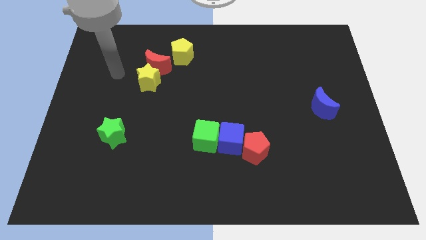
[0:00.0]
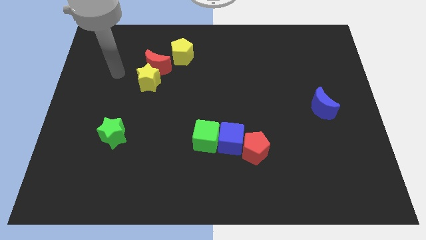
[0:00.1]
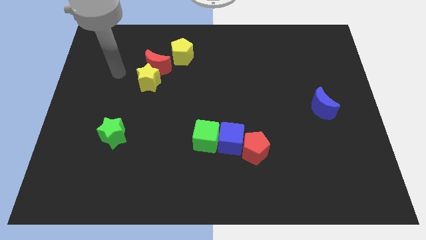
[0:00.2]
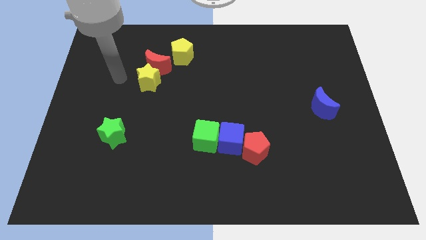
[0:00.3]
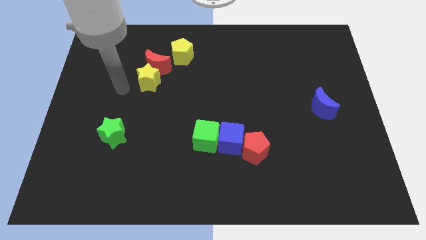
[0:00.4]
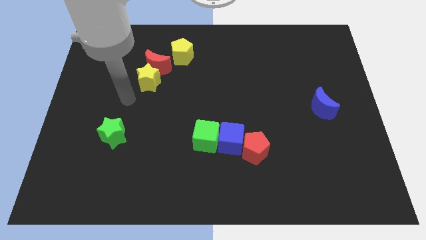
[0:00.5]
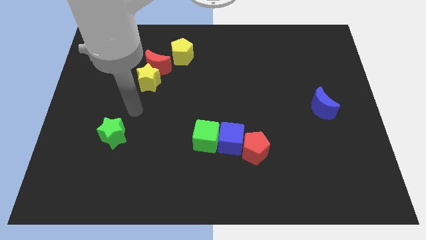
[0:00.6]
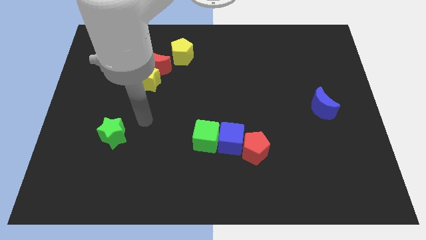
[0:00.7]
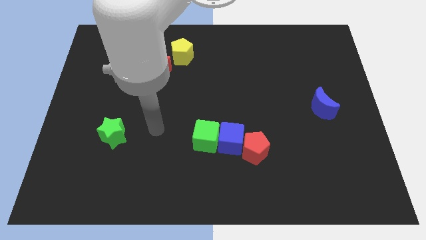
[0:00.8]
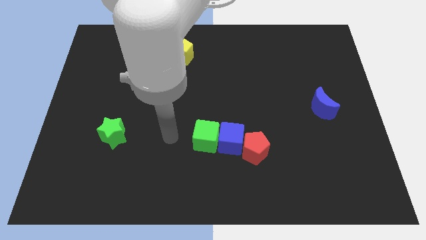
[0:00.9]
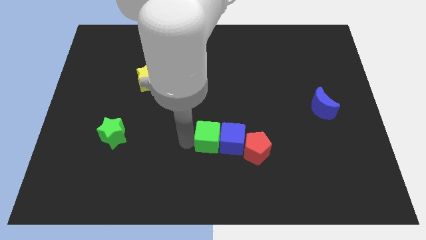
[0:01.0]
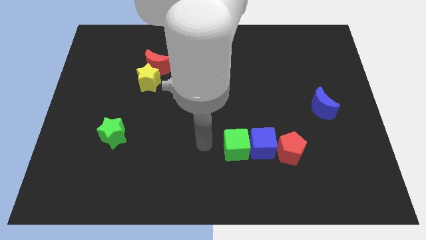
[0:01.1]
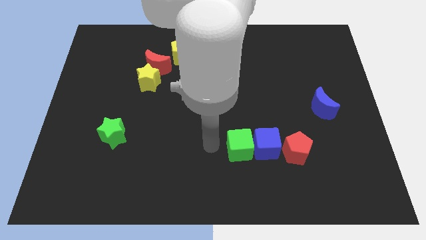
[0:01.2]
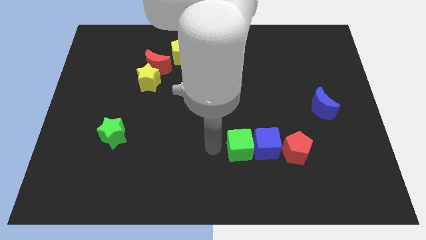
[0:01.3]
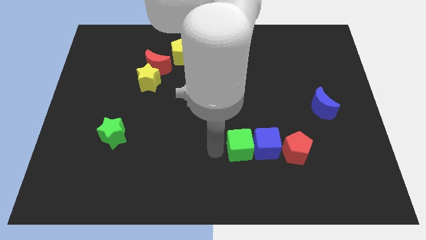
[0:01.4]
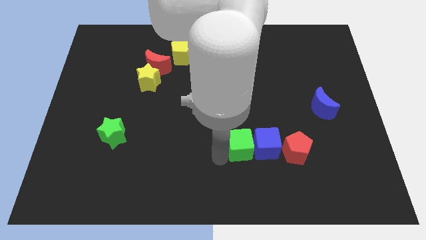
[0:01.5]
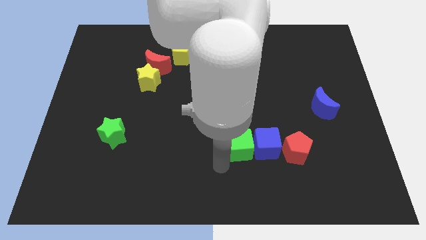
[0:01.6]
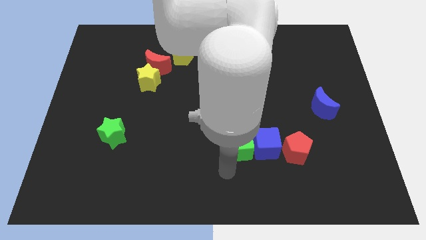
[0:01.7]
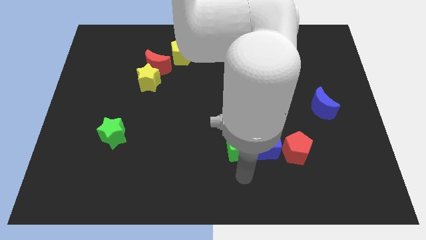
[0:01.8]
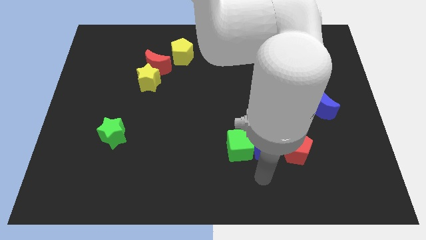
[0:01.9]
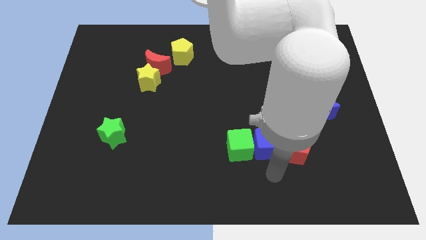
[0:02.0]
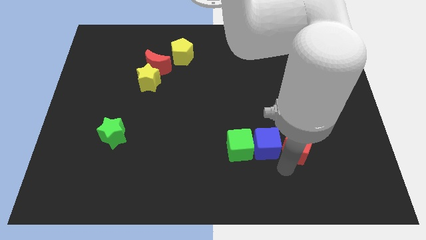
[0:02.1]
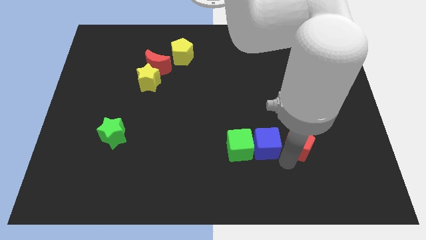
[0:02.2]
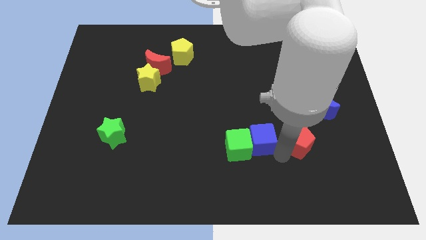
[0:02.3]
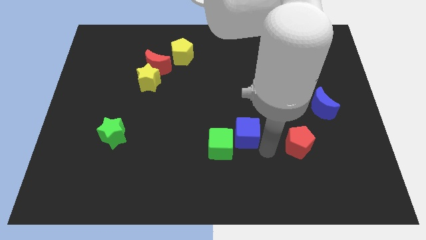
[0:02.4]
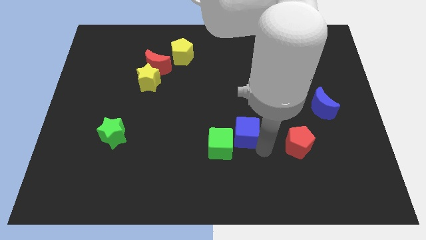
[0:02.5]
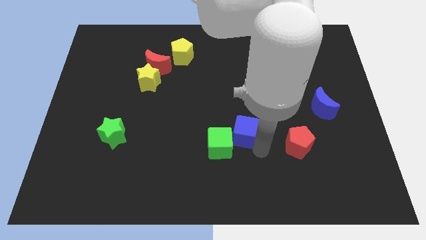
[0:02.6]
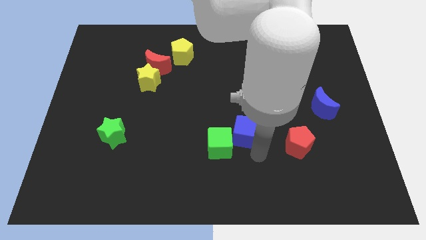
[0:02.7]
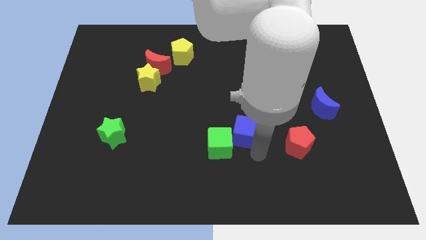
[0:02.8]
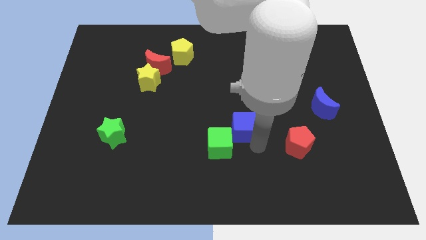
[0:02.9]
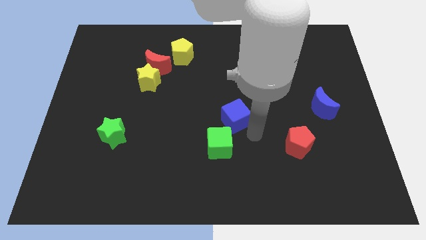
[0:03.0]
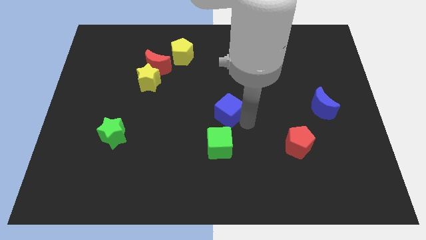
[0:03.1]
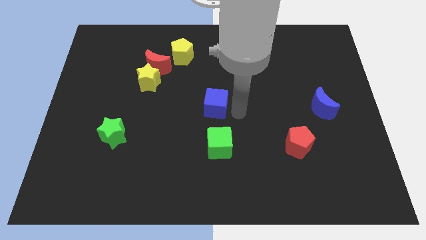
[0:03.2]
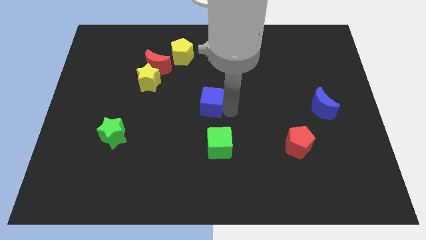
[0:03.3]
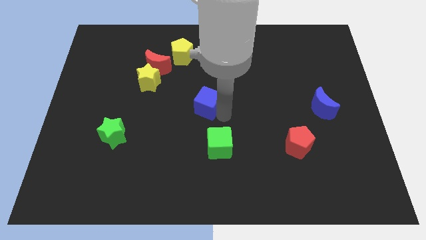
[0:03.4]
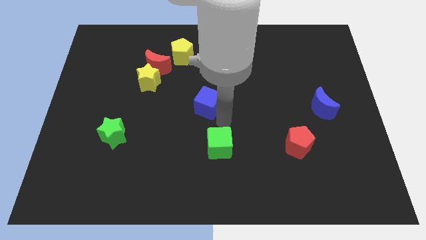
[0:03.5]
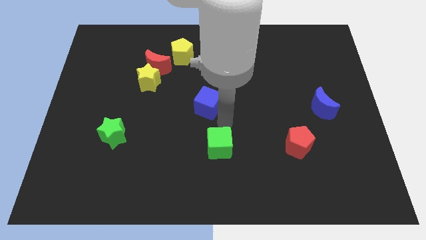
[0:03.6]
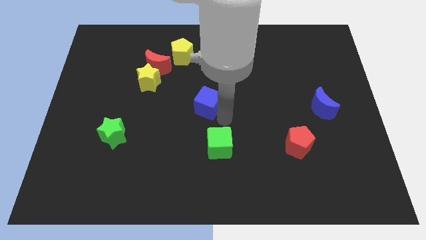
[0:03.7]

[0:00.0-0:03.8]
separate the blue cube from the green cube

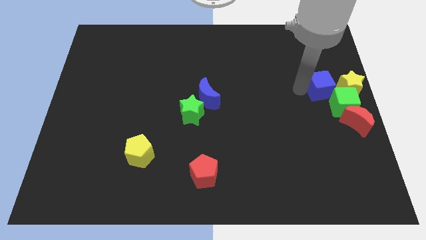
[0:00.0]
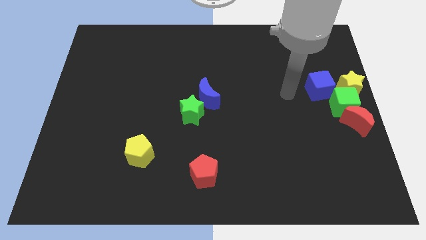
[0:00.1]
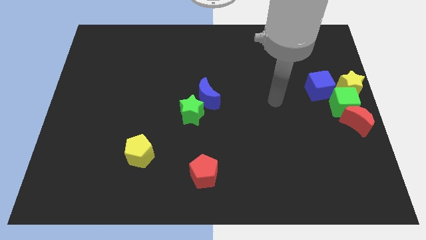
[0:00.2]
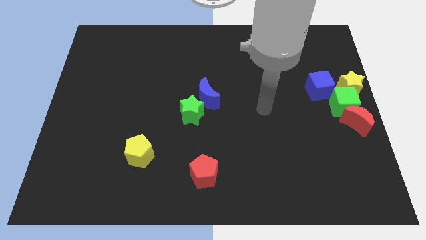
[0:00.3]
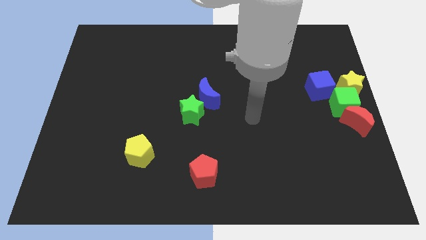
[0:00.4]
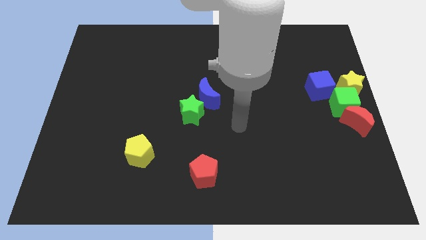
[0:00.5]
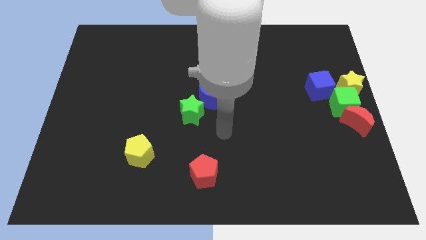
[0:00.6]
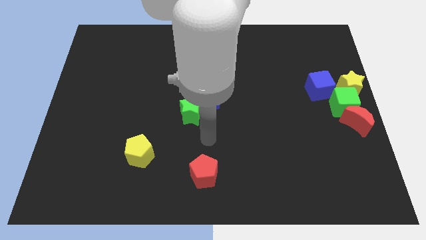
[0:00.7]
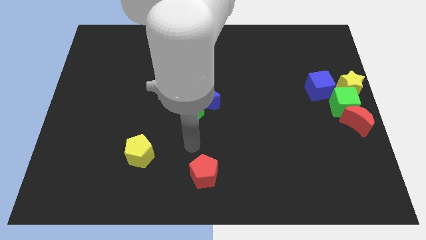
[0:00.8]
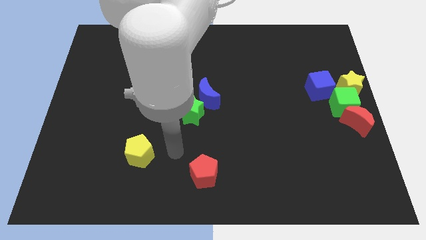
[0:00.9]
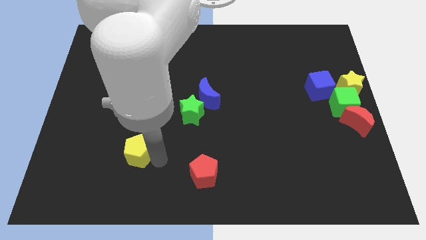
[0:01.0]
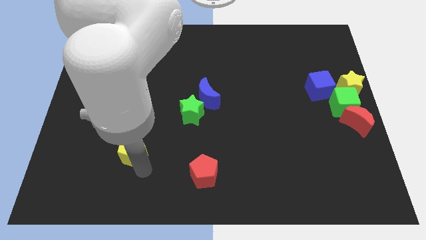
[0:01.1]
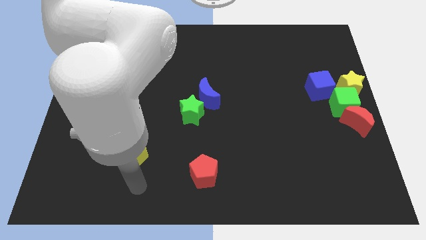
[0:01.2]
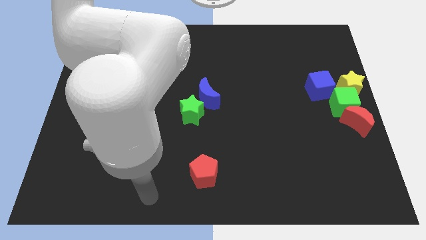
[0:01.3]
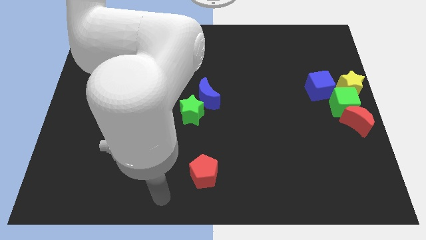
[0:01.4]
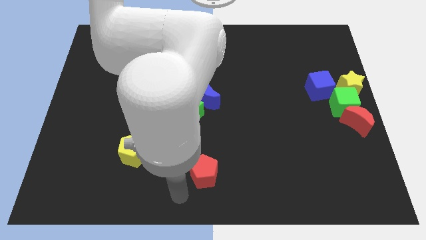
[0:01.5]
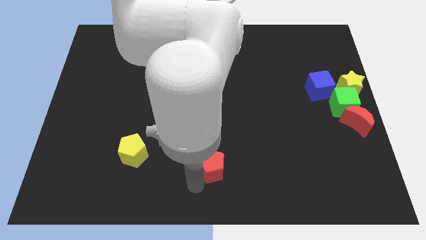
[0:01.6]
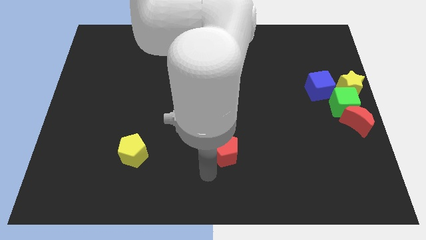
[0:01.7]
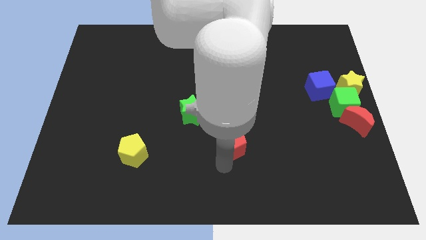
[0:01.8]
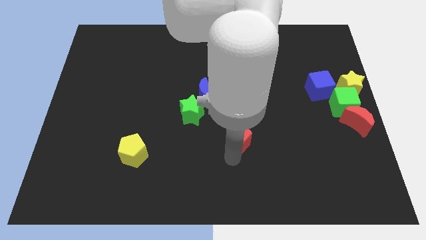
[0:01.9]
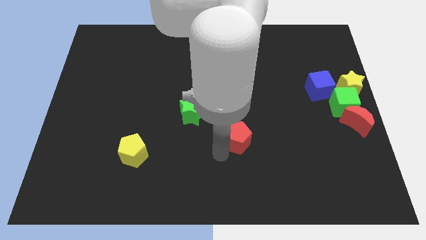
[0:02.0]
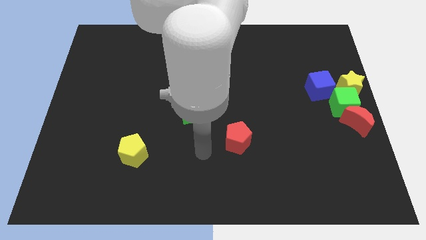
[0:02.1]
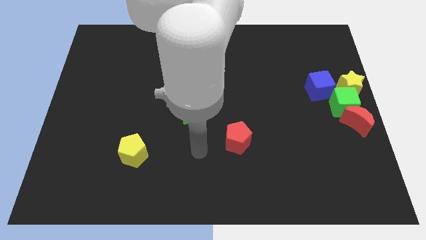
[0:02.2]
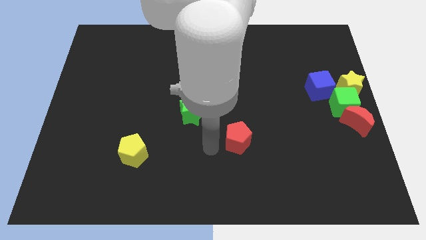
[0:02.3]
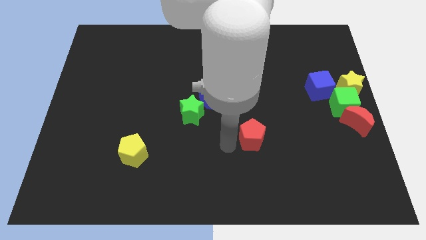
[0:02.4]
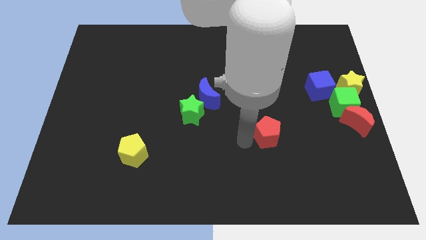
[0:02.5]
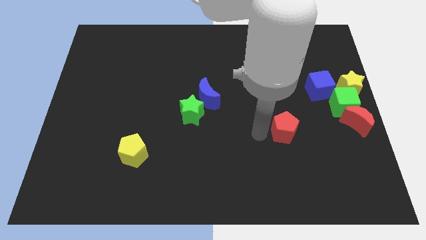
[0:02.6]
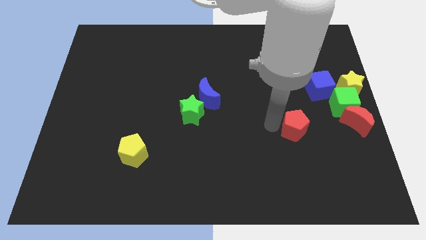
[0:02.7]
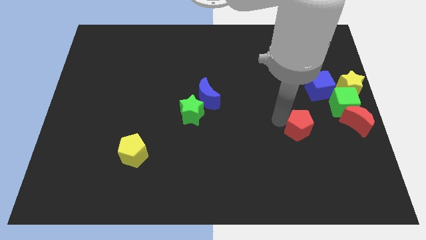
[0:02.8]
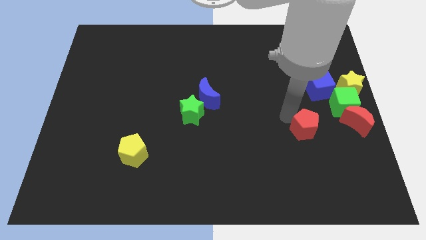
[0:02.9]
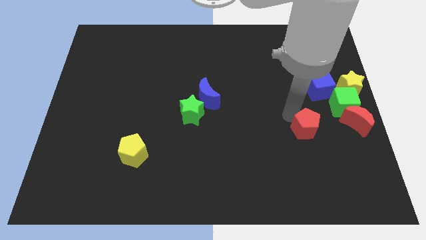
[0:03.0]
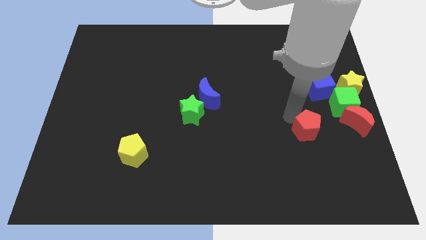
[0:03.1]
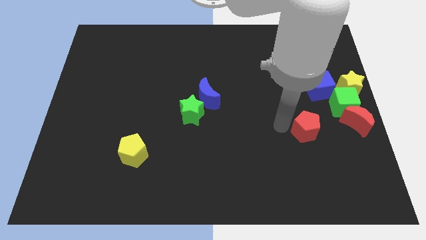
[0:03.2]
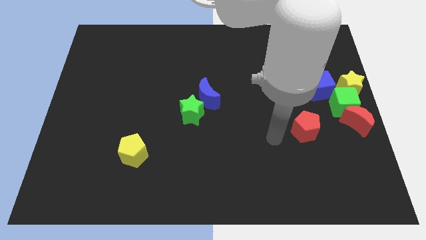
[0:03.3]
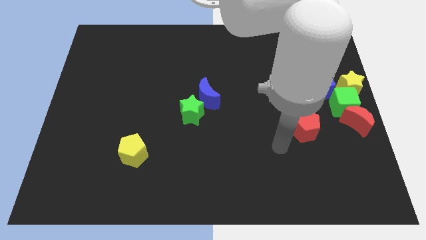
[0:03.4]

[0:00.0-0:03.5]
push the red pentagon to the left of the red crescent

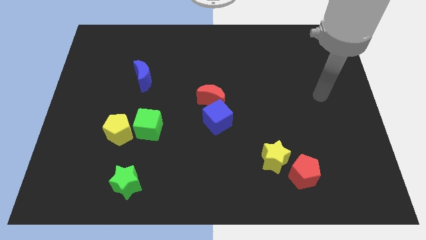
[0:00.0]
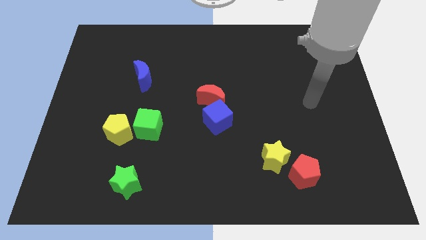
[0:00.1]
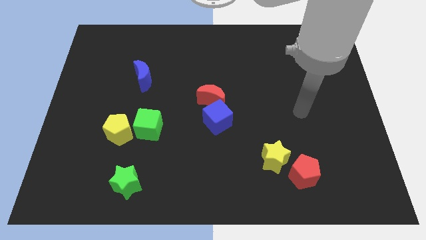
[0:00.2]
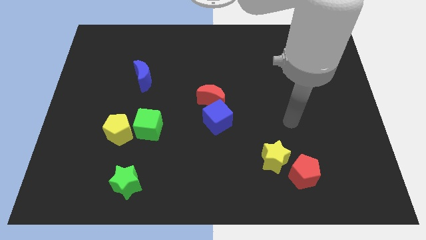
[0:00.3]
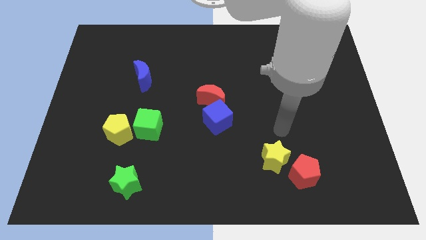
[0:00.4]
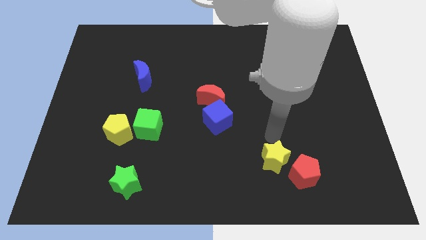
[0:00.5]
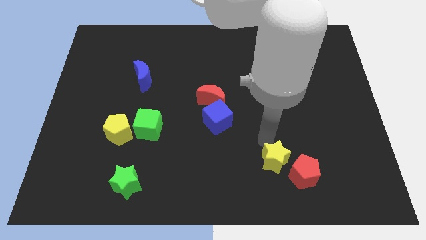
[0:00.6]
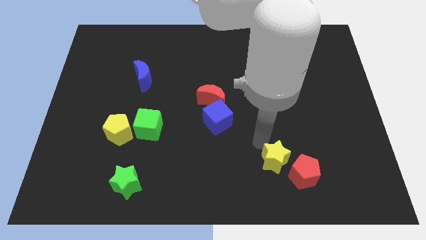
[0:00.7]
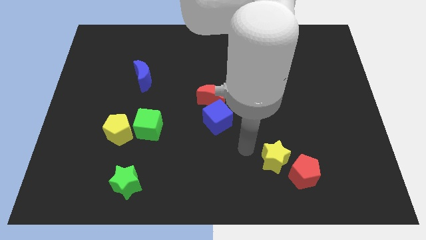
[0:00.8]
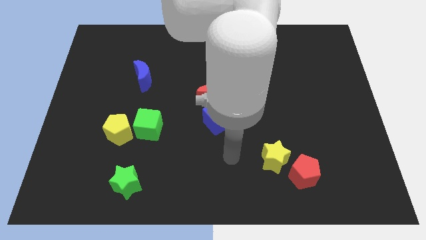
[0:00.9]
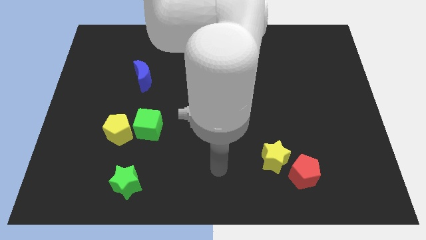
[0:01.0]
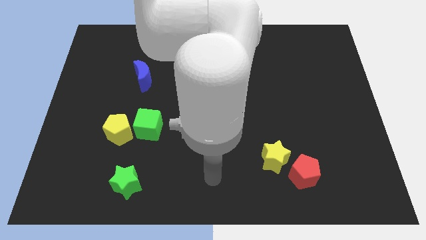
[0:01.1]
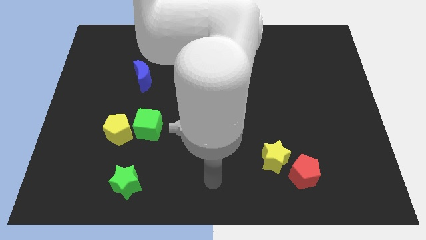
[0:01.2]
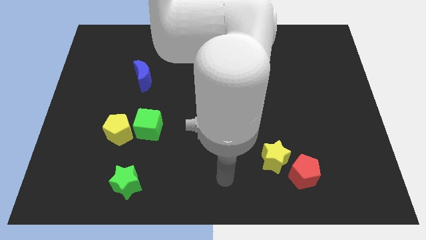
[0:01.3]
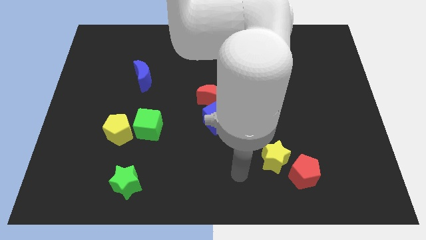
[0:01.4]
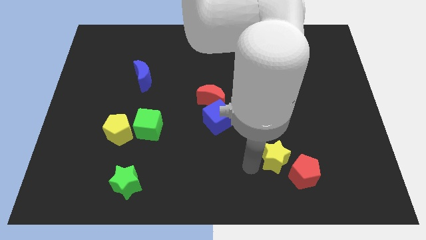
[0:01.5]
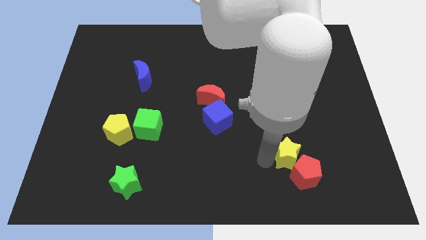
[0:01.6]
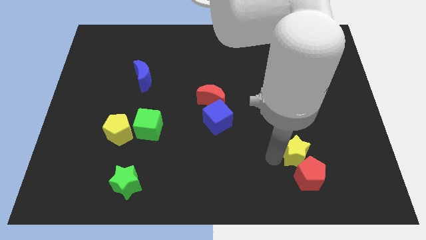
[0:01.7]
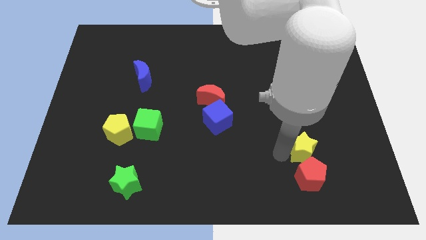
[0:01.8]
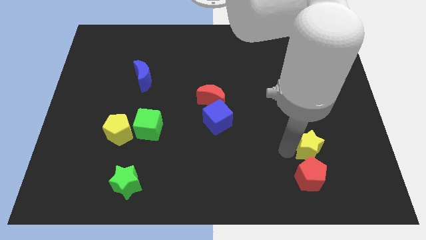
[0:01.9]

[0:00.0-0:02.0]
move the yellow star to the top of the red pentagon
